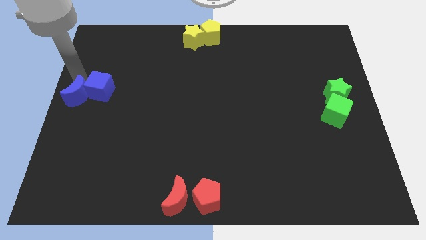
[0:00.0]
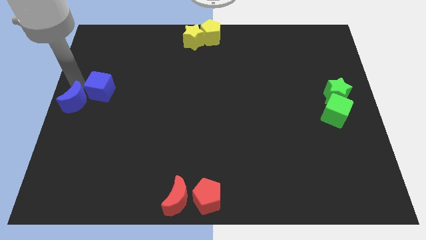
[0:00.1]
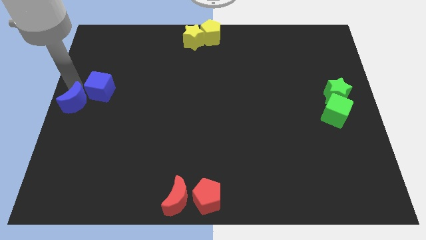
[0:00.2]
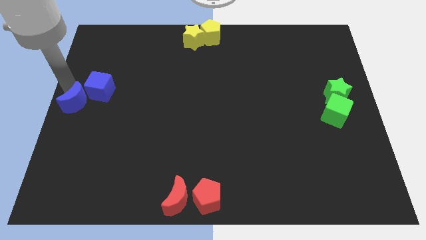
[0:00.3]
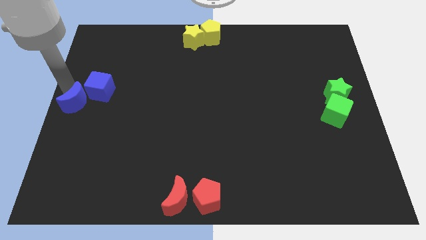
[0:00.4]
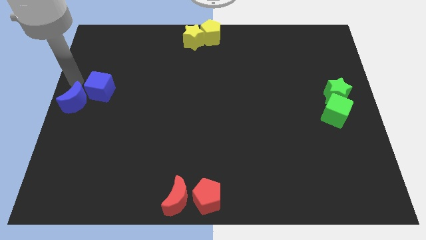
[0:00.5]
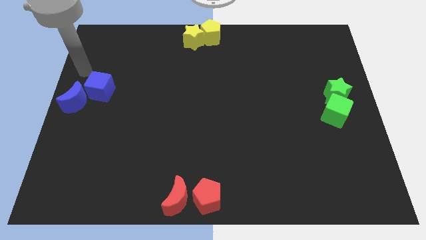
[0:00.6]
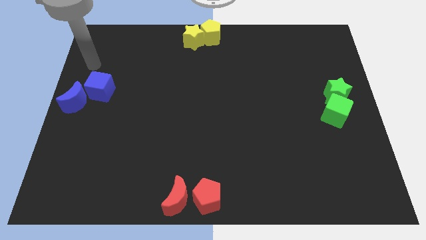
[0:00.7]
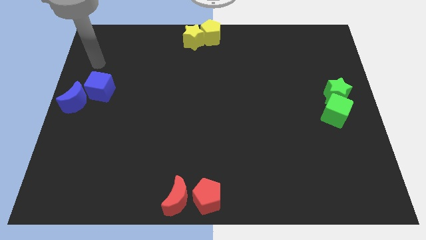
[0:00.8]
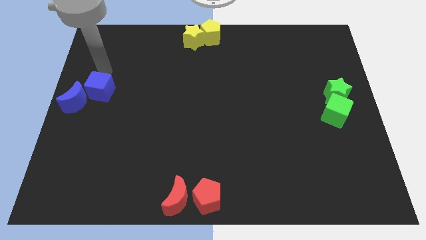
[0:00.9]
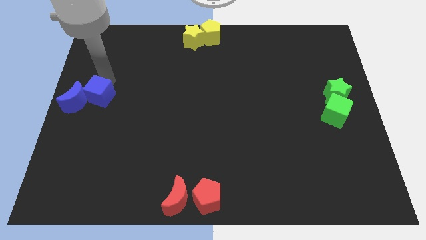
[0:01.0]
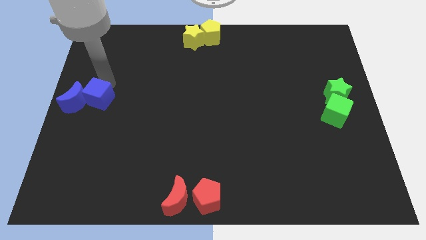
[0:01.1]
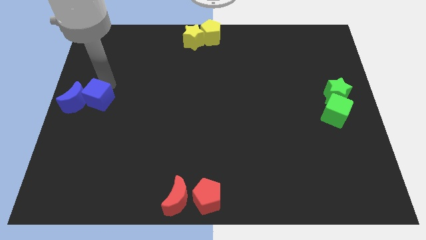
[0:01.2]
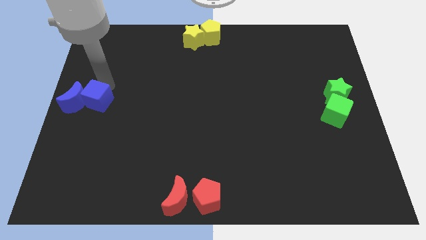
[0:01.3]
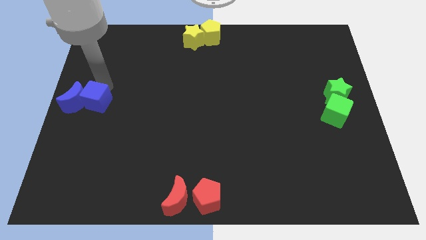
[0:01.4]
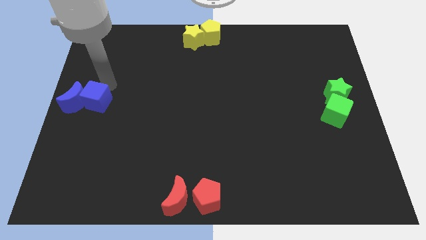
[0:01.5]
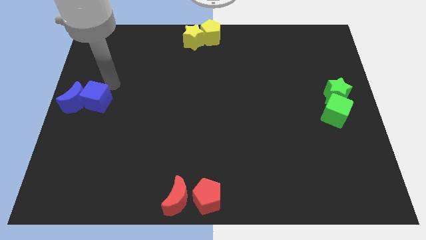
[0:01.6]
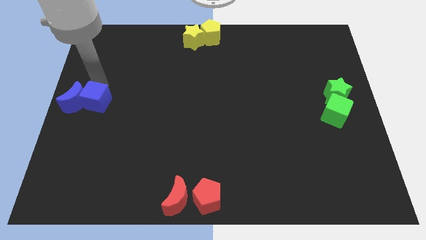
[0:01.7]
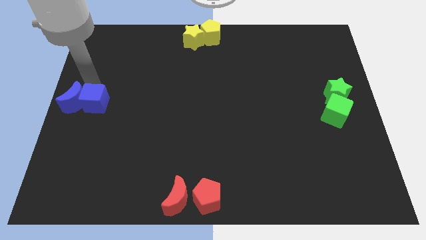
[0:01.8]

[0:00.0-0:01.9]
place the blue cube close to the blue moon

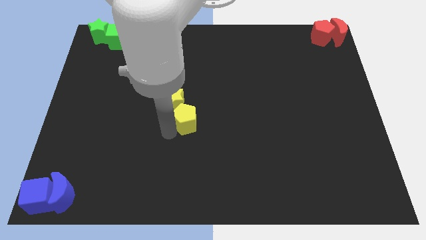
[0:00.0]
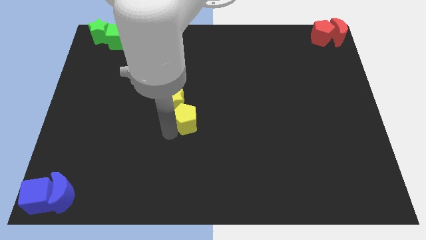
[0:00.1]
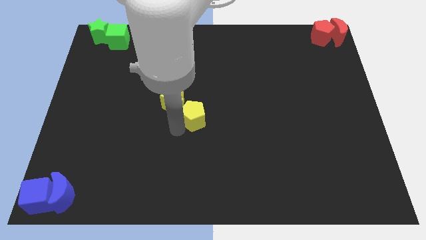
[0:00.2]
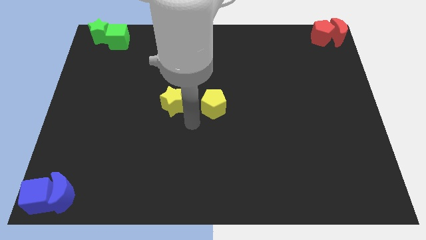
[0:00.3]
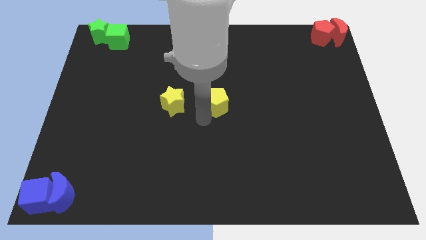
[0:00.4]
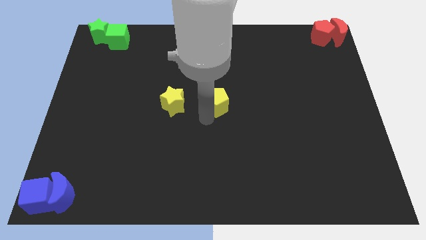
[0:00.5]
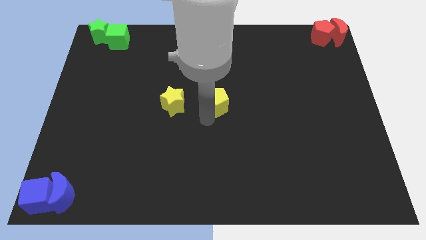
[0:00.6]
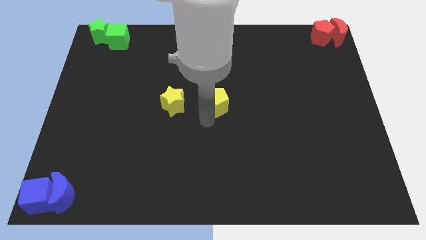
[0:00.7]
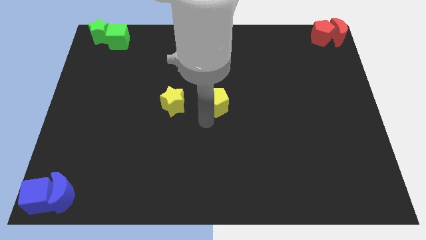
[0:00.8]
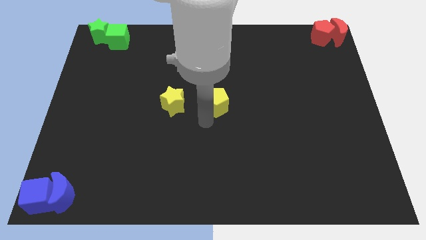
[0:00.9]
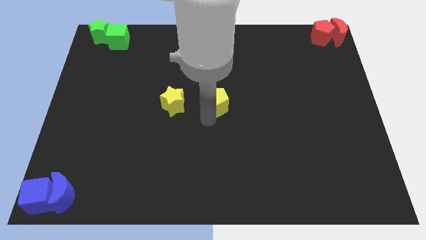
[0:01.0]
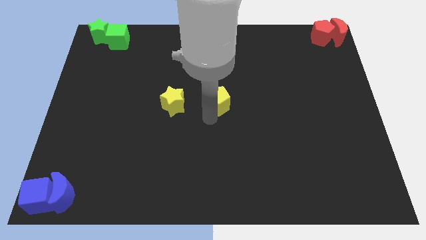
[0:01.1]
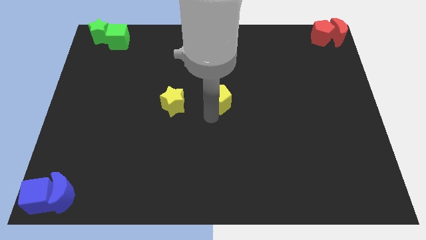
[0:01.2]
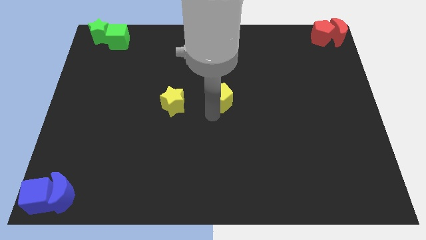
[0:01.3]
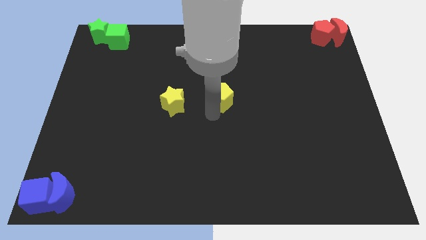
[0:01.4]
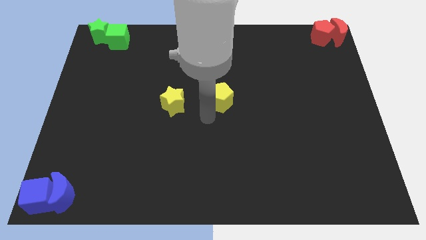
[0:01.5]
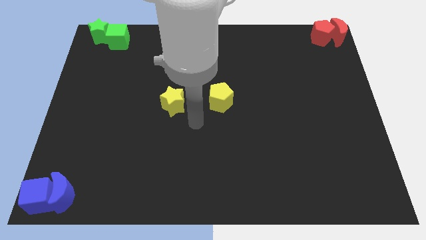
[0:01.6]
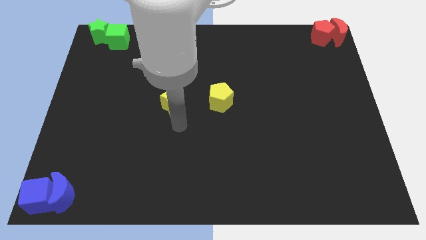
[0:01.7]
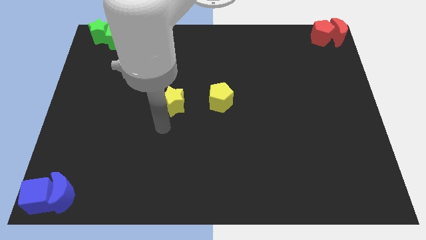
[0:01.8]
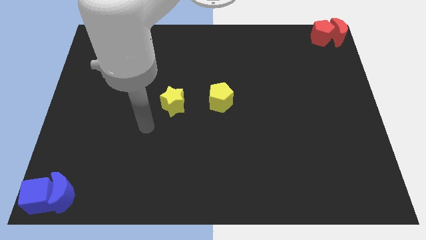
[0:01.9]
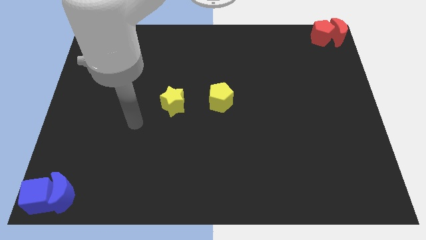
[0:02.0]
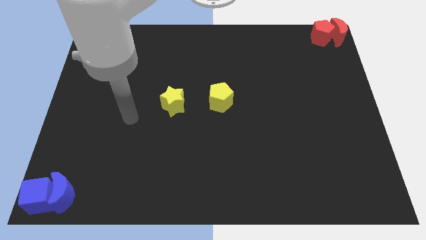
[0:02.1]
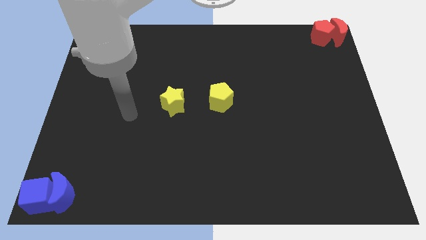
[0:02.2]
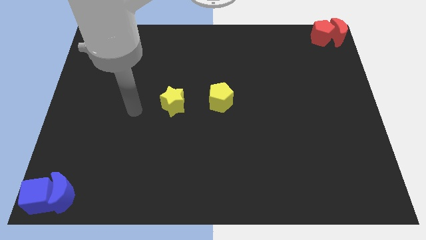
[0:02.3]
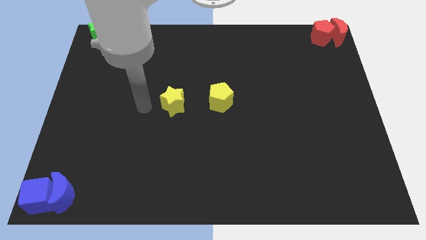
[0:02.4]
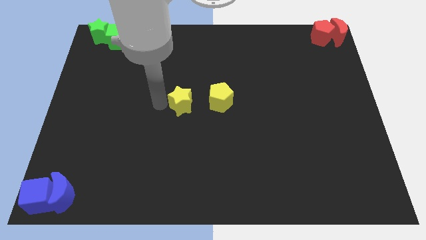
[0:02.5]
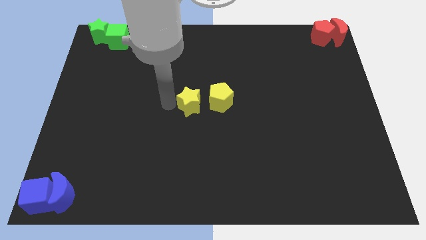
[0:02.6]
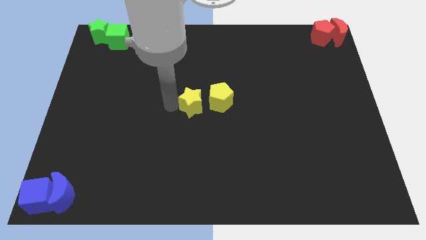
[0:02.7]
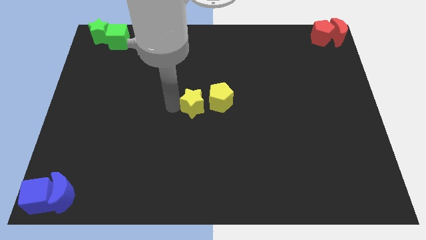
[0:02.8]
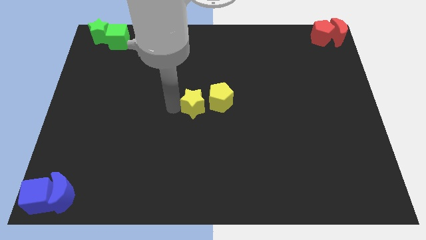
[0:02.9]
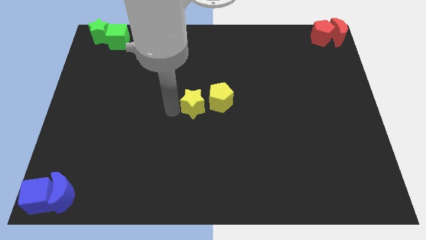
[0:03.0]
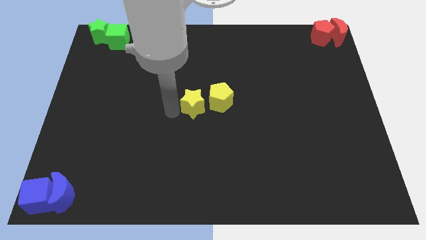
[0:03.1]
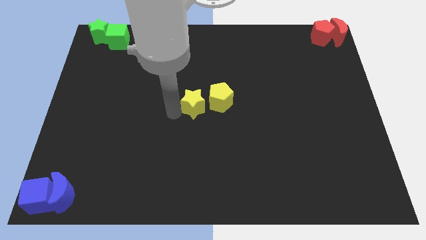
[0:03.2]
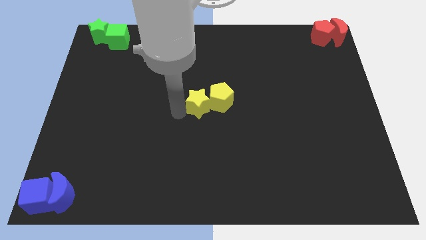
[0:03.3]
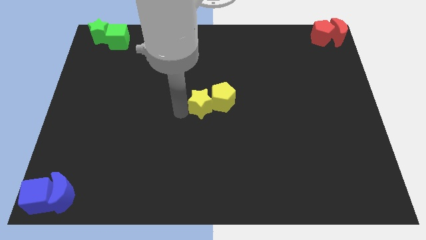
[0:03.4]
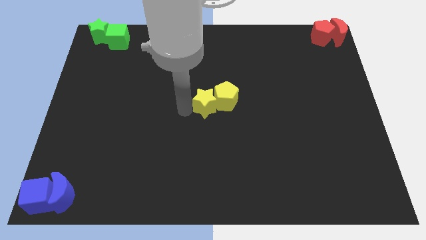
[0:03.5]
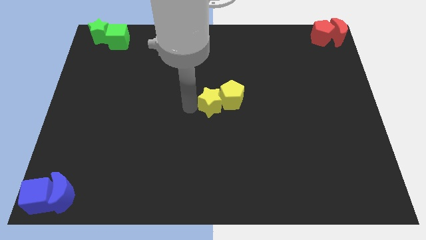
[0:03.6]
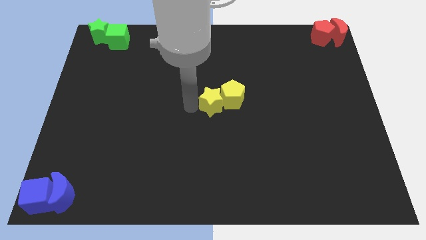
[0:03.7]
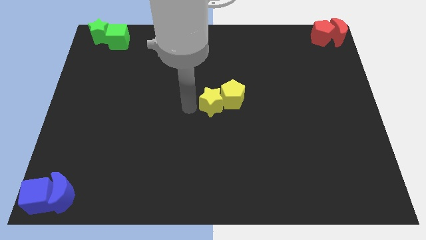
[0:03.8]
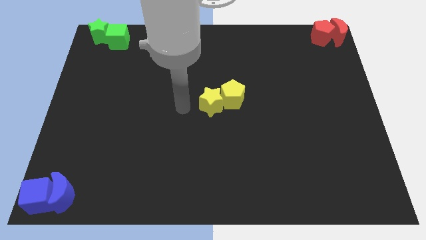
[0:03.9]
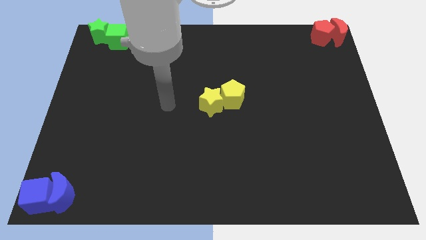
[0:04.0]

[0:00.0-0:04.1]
move yellow star along with yellow pentagon to the center of board

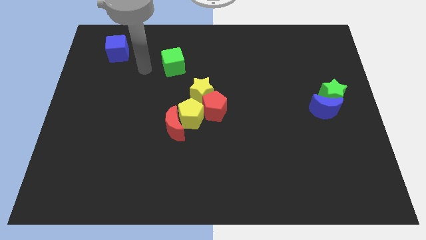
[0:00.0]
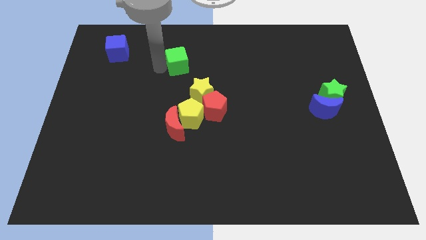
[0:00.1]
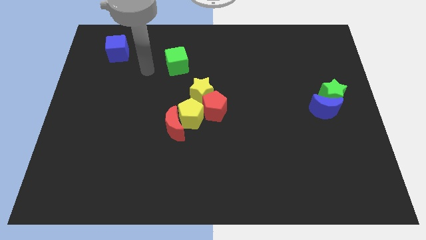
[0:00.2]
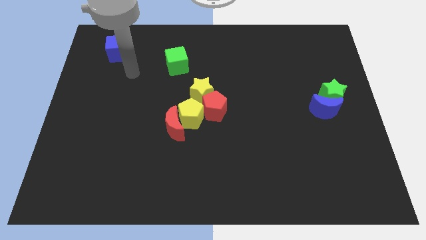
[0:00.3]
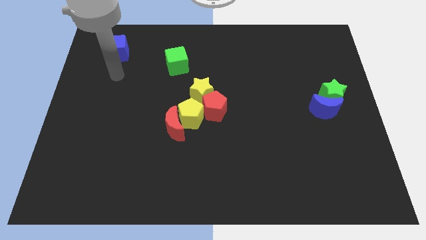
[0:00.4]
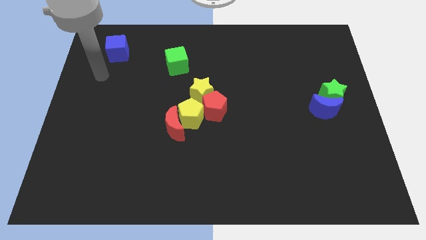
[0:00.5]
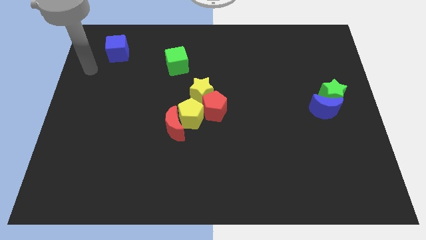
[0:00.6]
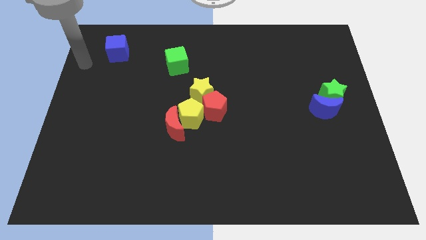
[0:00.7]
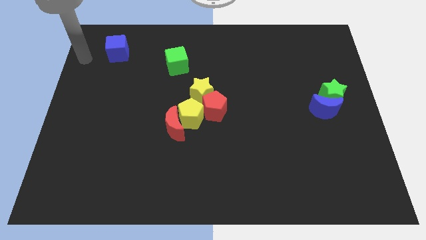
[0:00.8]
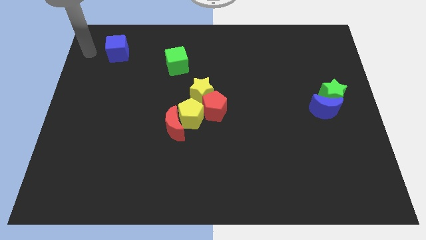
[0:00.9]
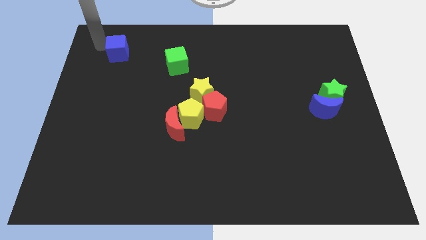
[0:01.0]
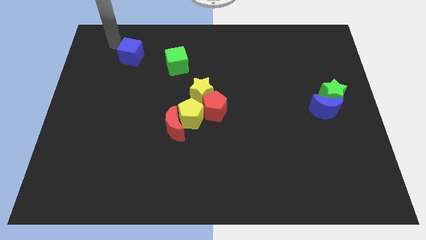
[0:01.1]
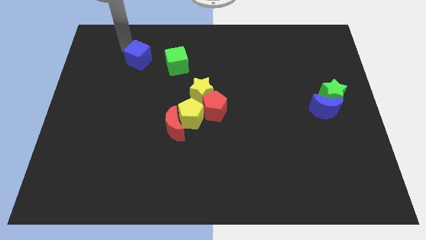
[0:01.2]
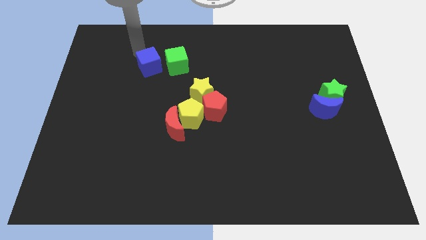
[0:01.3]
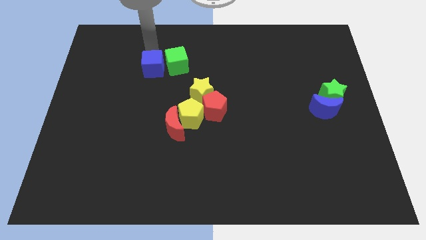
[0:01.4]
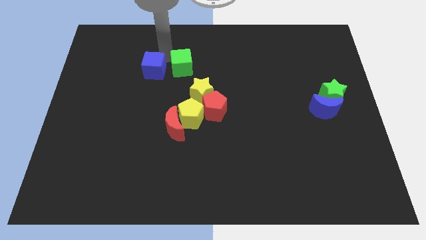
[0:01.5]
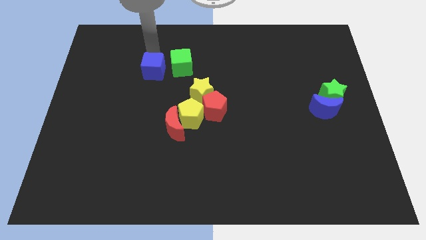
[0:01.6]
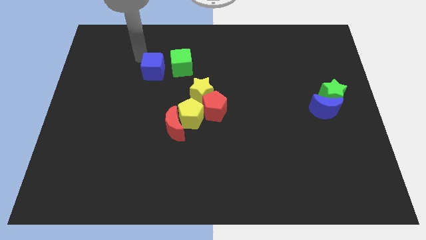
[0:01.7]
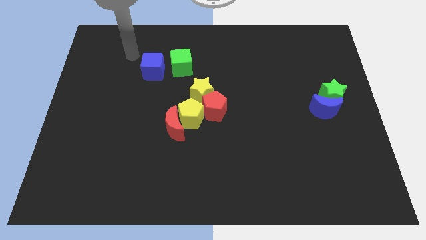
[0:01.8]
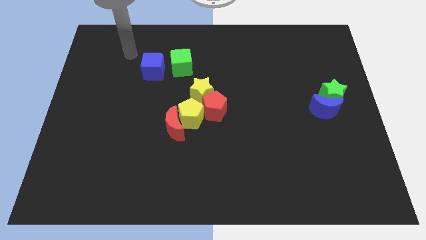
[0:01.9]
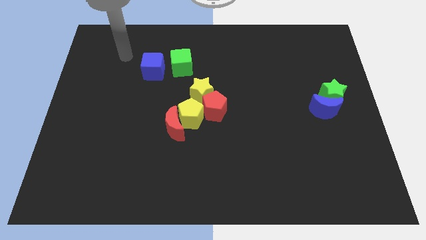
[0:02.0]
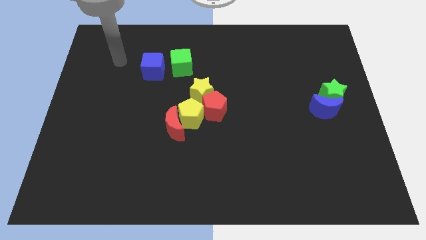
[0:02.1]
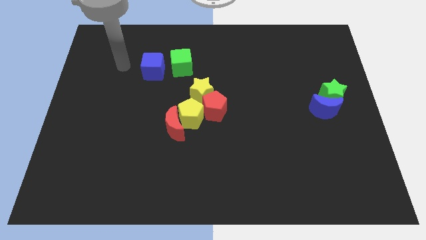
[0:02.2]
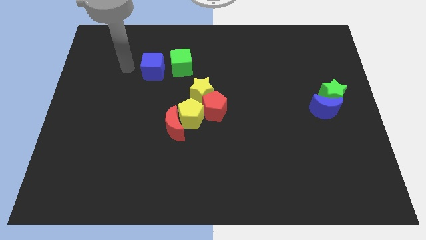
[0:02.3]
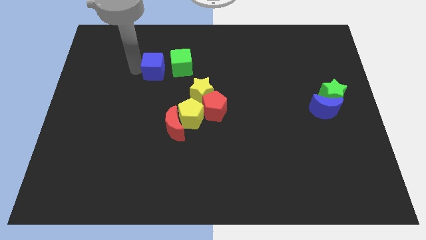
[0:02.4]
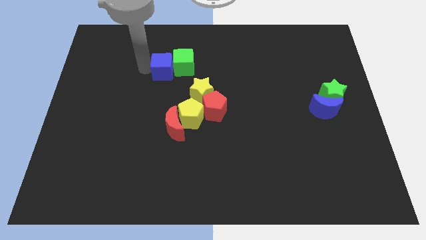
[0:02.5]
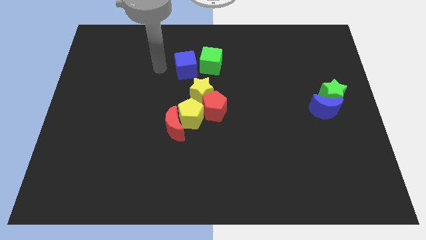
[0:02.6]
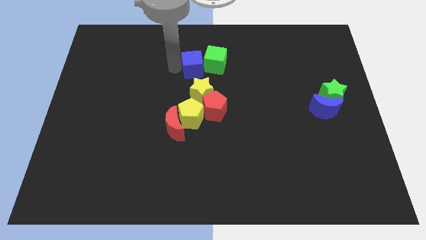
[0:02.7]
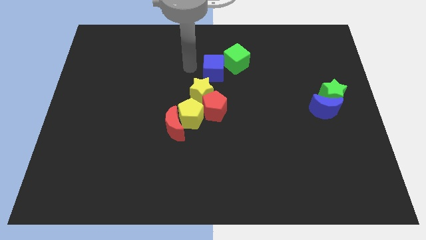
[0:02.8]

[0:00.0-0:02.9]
push the blue cube along with green cube to the center of the board

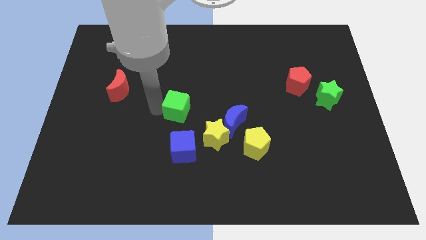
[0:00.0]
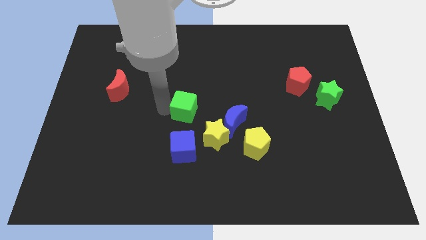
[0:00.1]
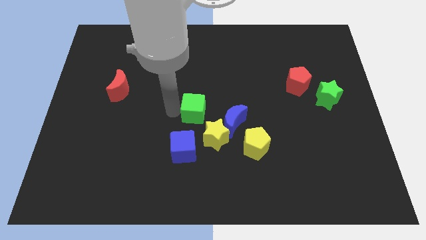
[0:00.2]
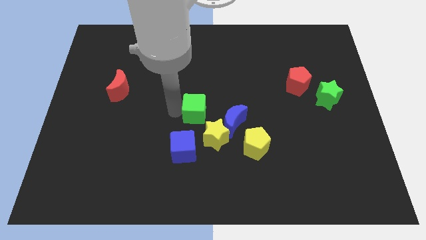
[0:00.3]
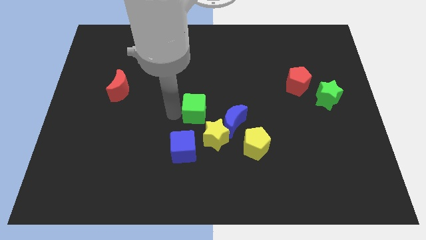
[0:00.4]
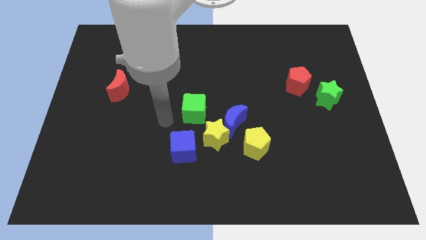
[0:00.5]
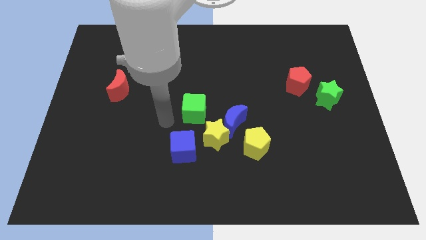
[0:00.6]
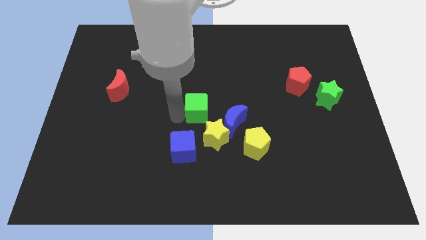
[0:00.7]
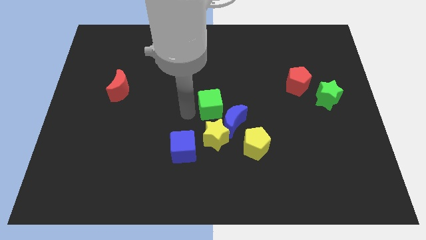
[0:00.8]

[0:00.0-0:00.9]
push the green cube to the top of yellow star
